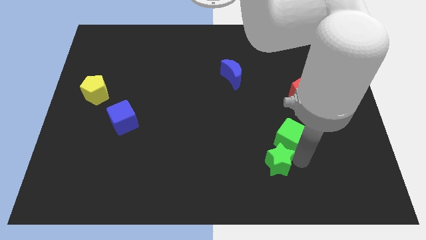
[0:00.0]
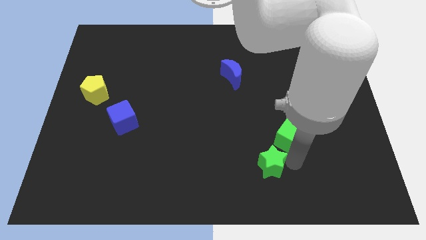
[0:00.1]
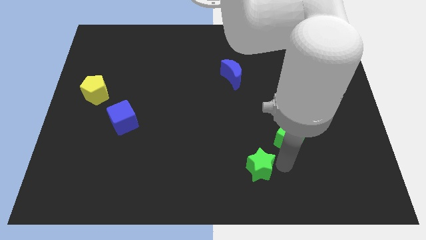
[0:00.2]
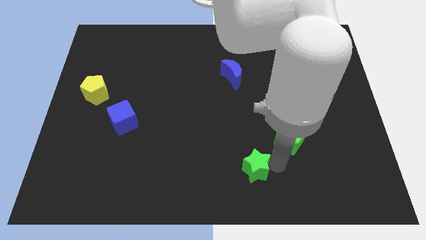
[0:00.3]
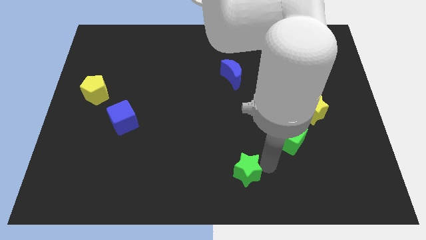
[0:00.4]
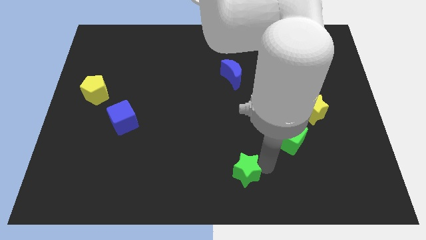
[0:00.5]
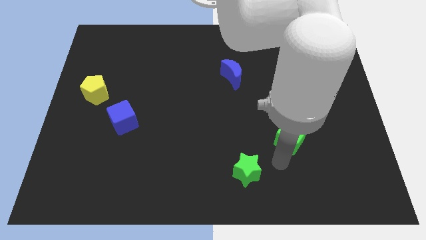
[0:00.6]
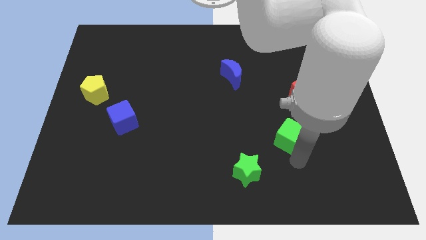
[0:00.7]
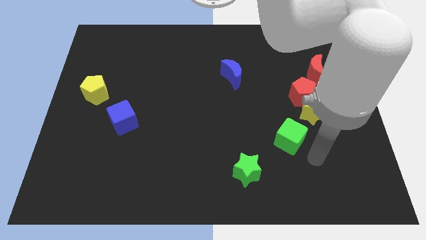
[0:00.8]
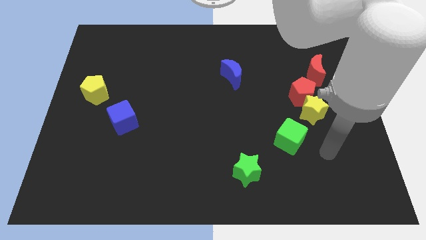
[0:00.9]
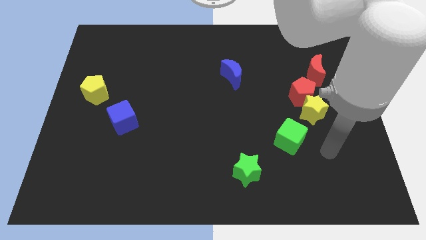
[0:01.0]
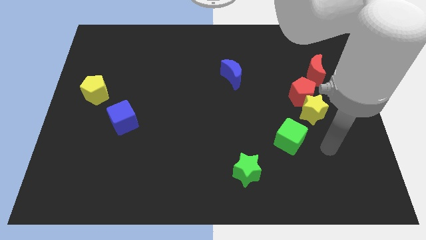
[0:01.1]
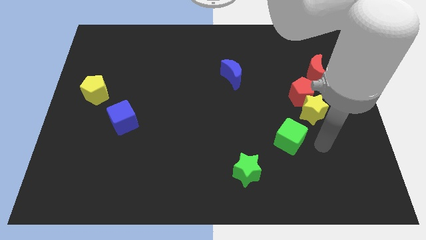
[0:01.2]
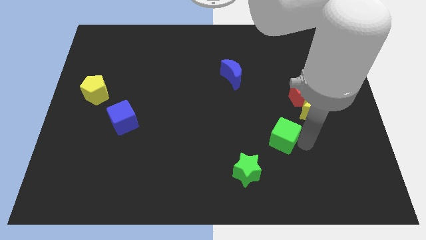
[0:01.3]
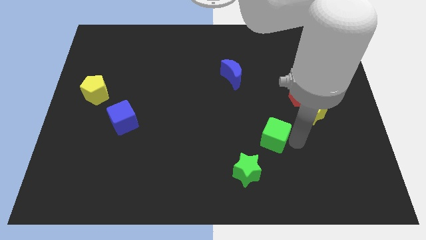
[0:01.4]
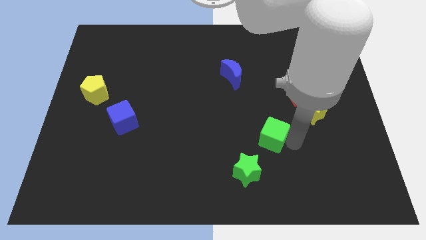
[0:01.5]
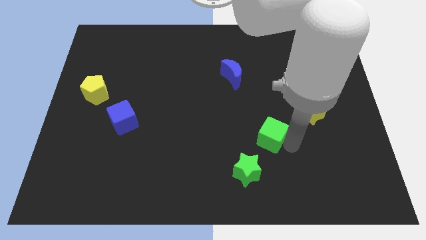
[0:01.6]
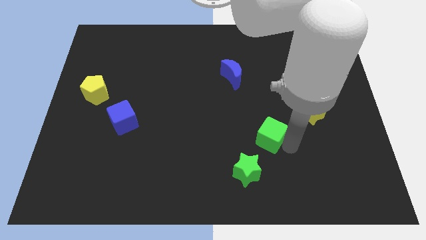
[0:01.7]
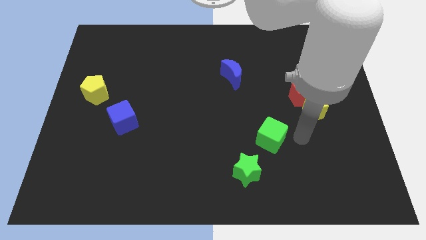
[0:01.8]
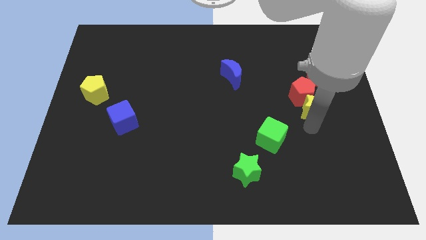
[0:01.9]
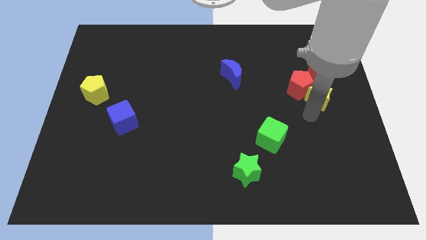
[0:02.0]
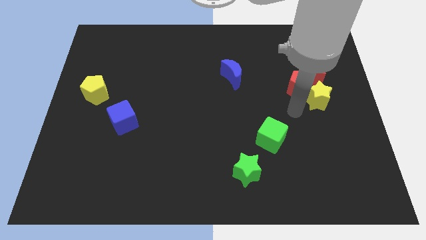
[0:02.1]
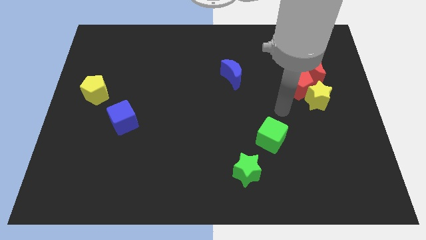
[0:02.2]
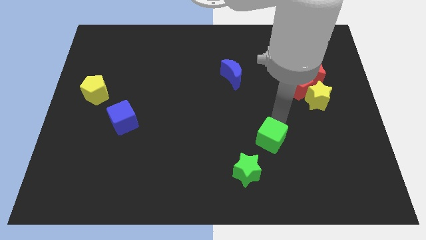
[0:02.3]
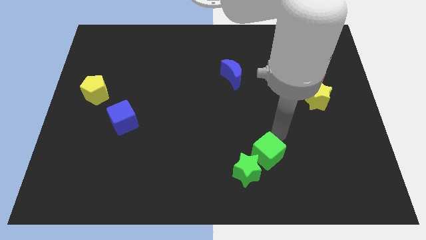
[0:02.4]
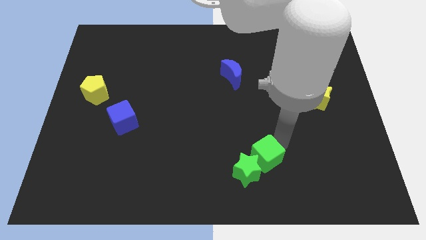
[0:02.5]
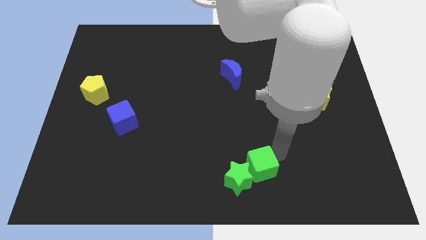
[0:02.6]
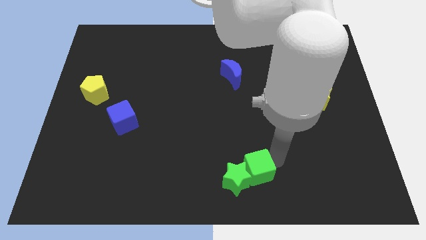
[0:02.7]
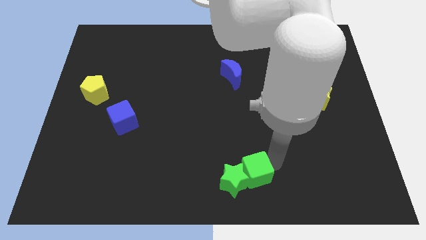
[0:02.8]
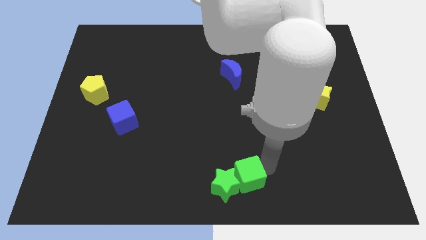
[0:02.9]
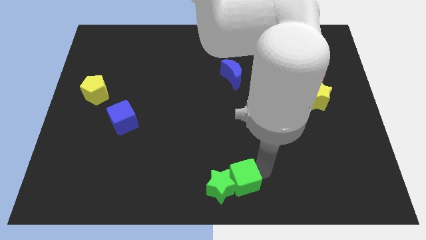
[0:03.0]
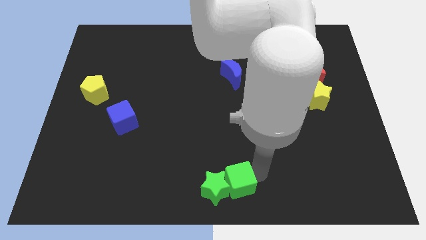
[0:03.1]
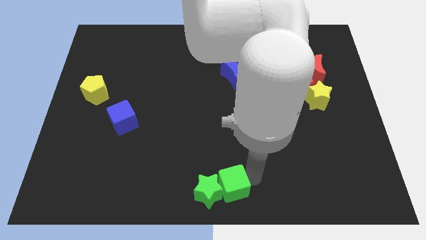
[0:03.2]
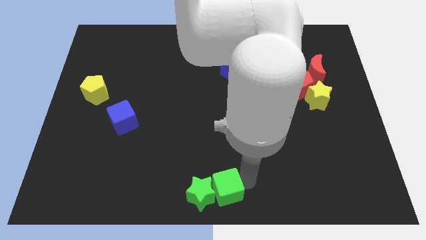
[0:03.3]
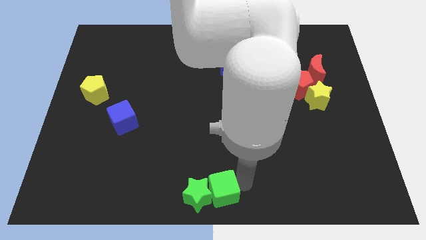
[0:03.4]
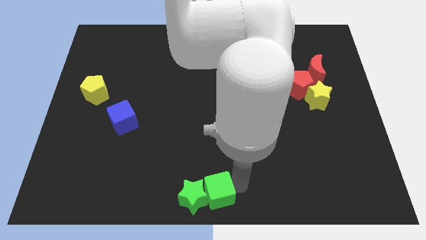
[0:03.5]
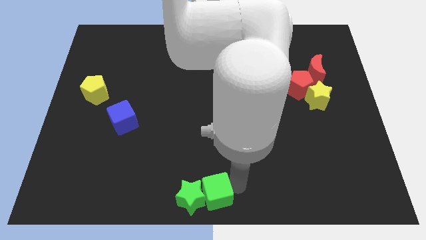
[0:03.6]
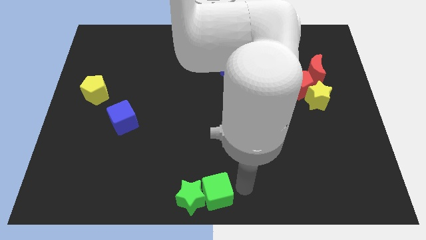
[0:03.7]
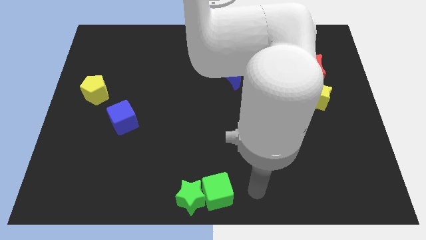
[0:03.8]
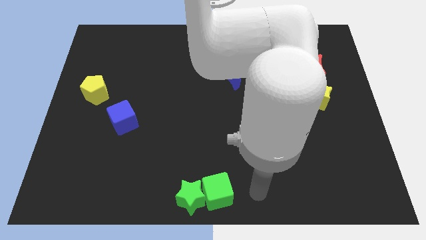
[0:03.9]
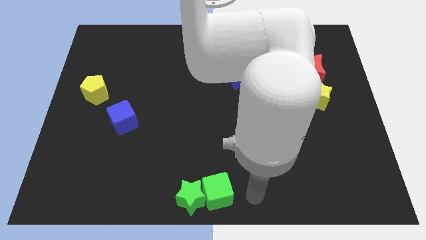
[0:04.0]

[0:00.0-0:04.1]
move green cube and green star to the bottom center of the board

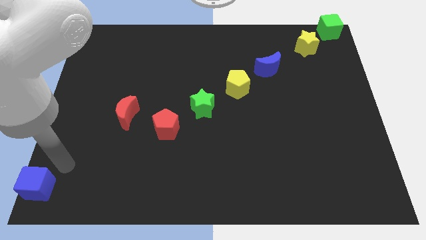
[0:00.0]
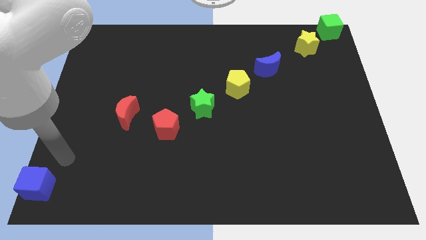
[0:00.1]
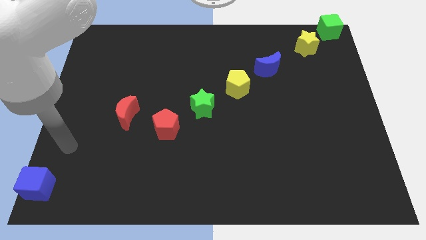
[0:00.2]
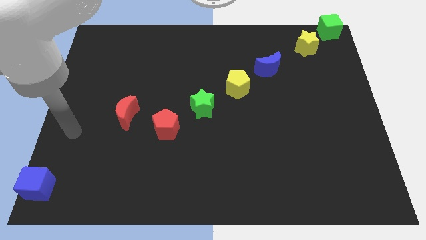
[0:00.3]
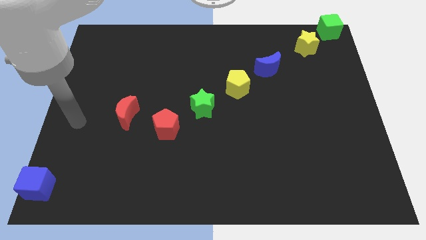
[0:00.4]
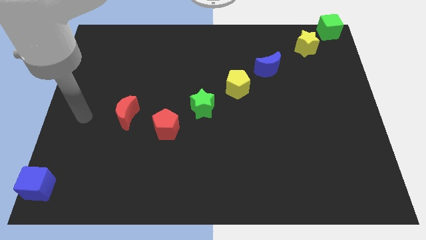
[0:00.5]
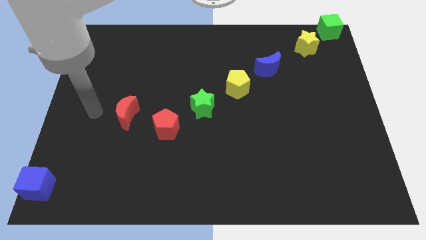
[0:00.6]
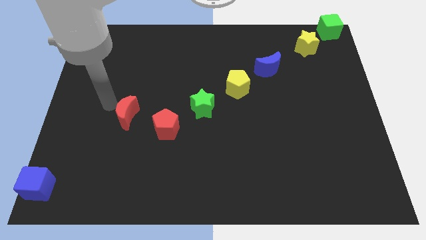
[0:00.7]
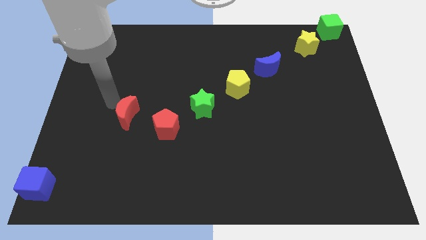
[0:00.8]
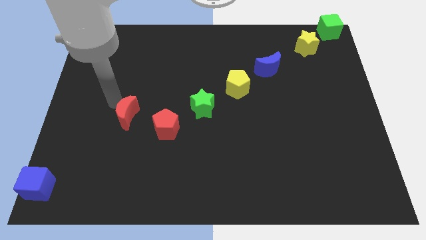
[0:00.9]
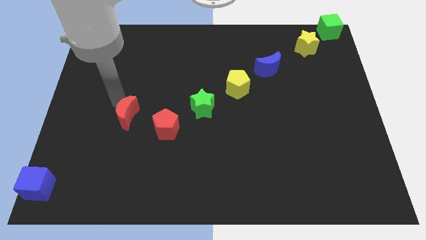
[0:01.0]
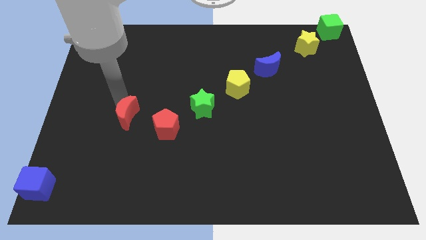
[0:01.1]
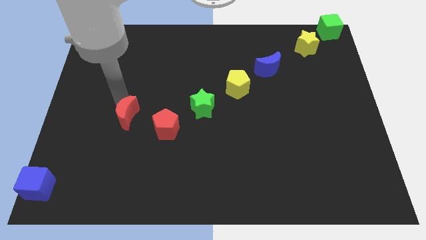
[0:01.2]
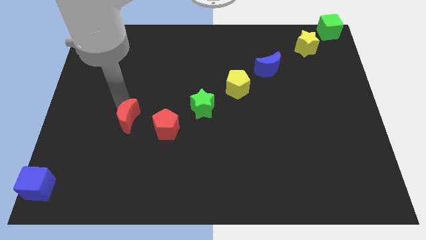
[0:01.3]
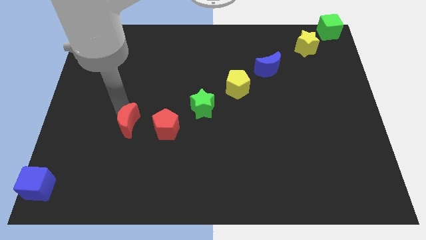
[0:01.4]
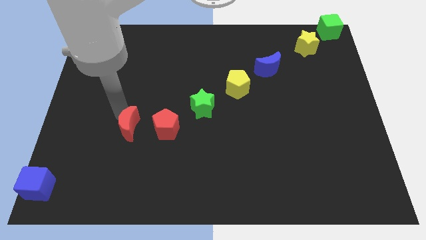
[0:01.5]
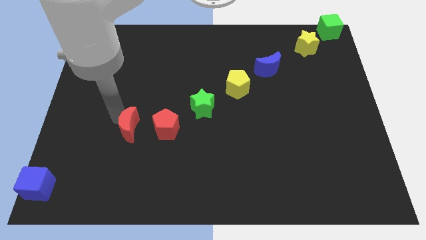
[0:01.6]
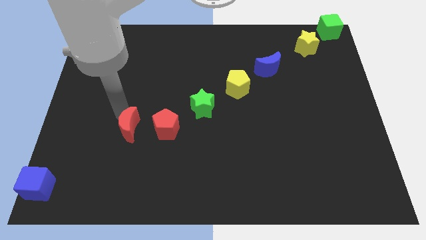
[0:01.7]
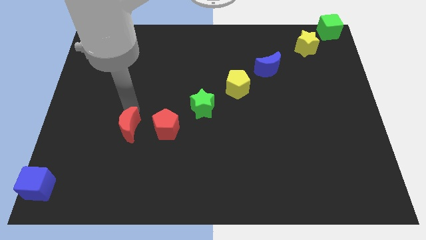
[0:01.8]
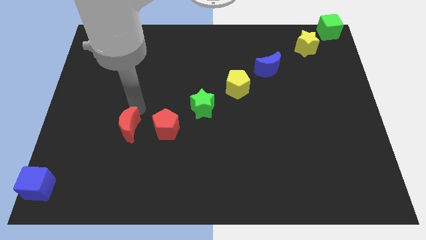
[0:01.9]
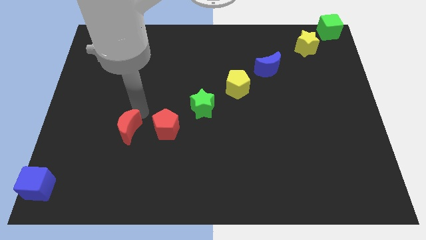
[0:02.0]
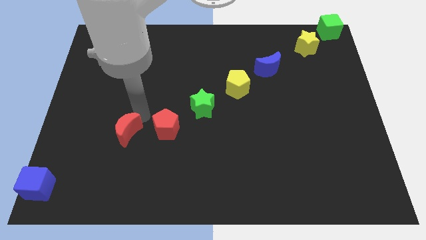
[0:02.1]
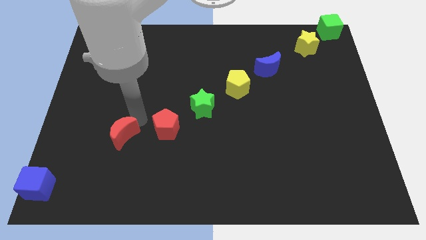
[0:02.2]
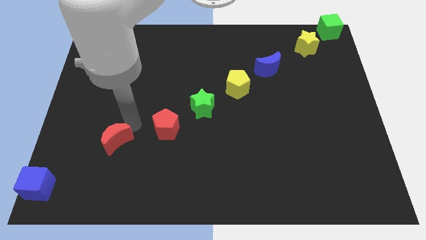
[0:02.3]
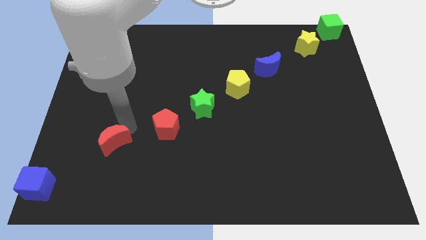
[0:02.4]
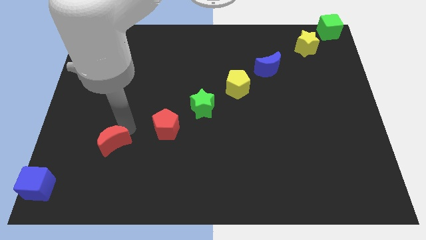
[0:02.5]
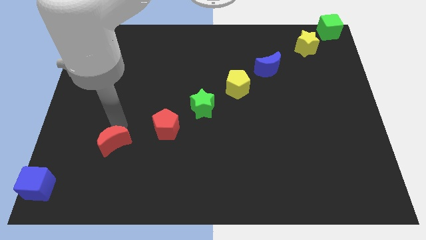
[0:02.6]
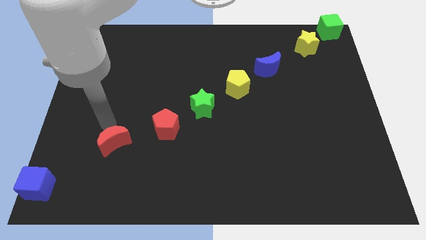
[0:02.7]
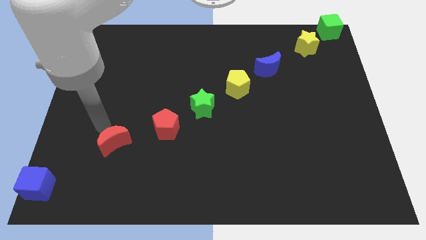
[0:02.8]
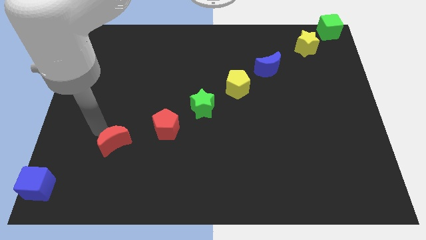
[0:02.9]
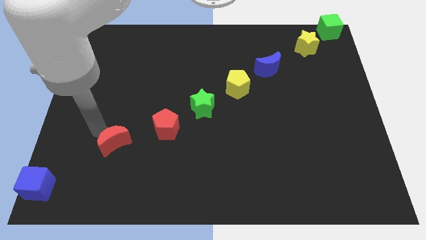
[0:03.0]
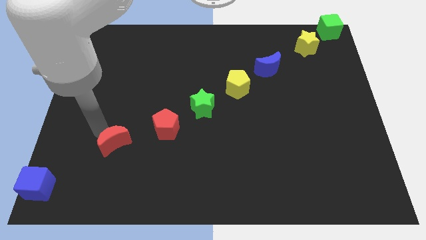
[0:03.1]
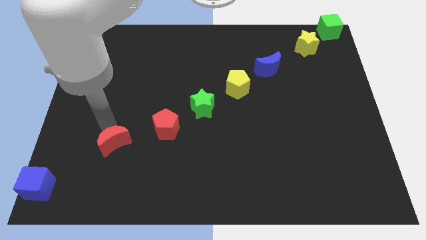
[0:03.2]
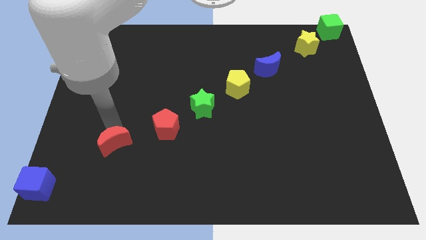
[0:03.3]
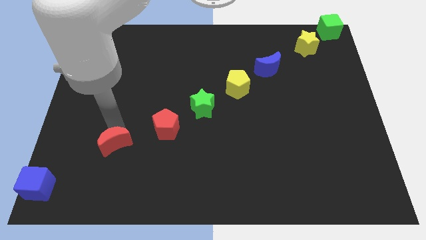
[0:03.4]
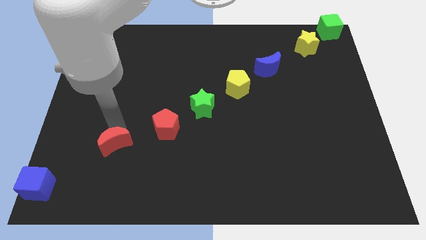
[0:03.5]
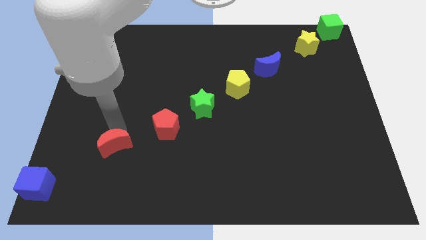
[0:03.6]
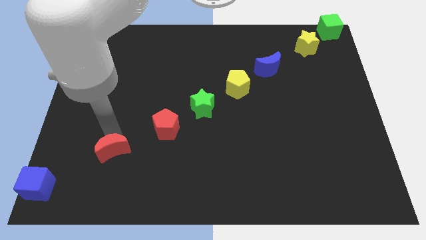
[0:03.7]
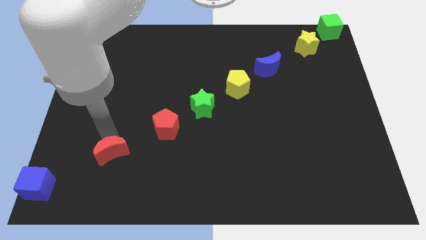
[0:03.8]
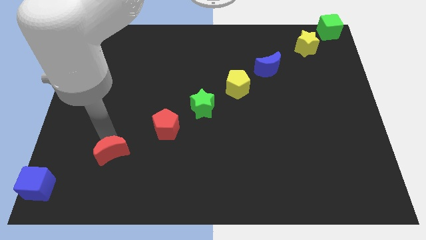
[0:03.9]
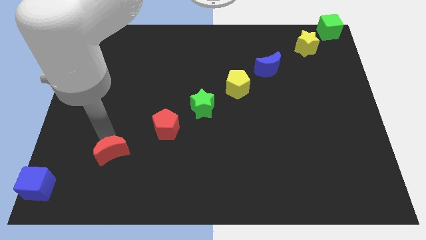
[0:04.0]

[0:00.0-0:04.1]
place the red moon in between the blue cube and red pentagon

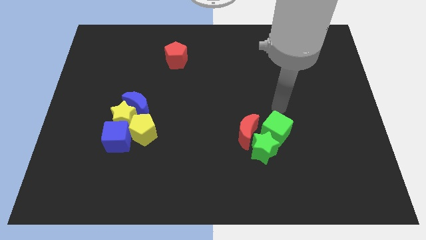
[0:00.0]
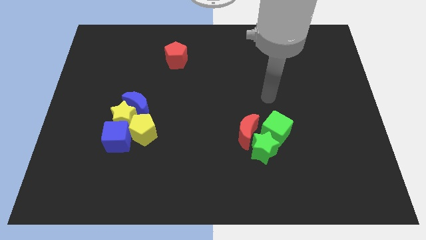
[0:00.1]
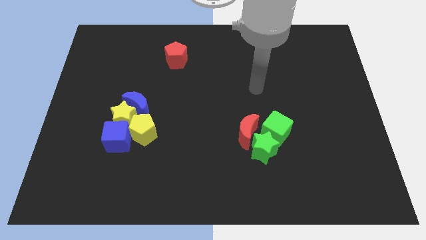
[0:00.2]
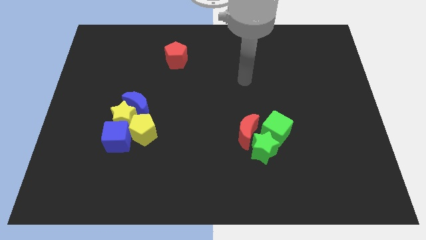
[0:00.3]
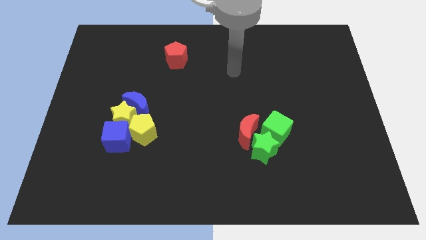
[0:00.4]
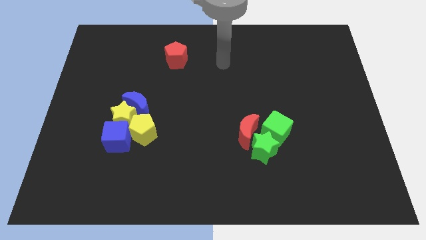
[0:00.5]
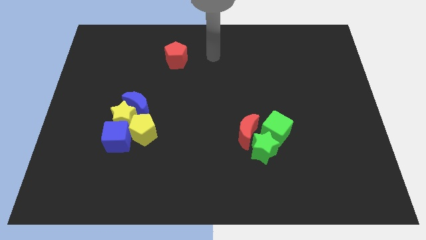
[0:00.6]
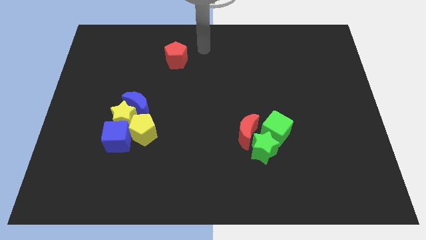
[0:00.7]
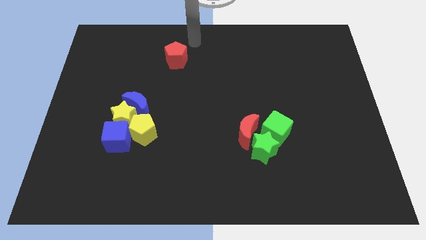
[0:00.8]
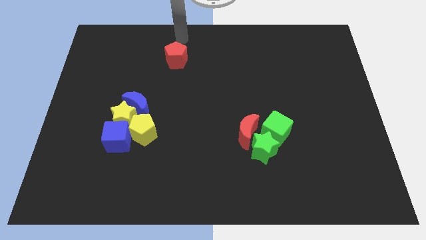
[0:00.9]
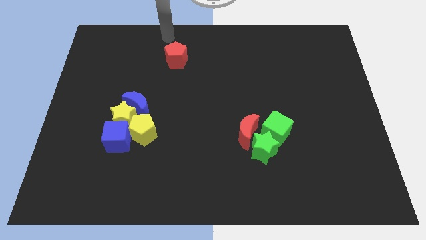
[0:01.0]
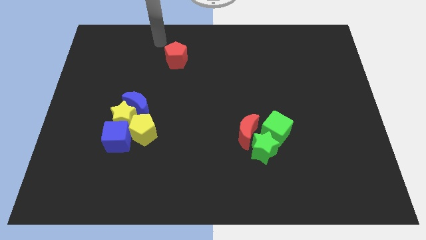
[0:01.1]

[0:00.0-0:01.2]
point your arm towards the red pentagon
